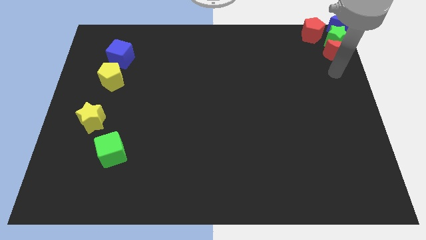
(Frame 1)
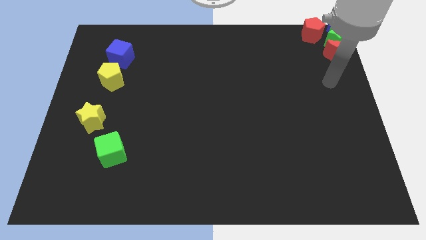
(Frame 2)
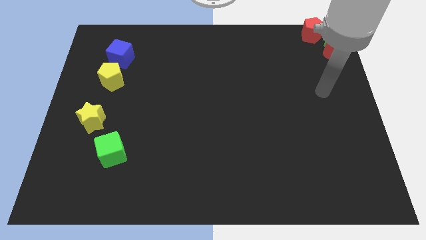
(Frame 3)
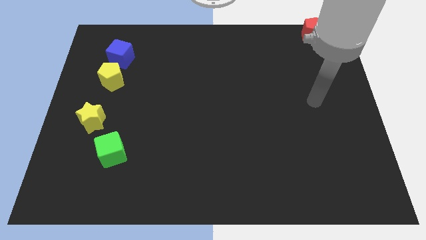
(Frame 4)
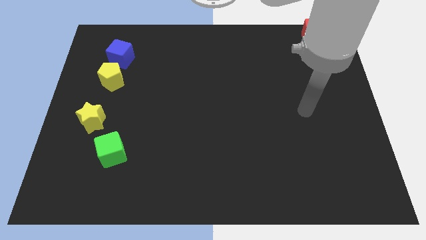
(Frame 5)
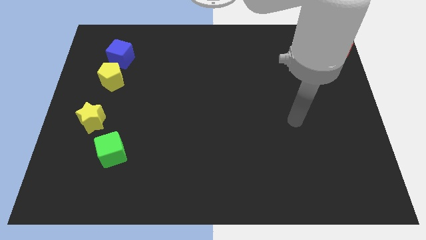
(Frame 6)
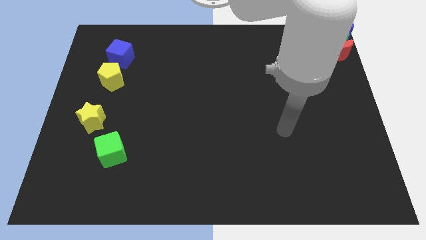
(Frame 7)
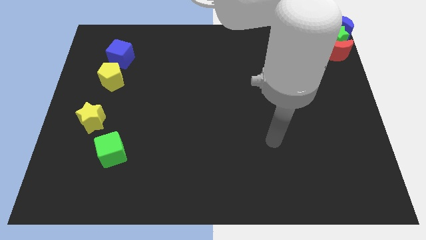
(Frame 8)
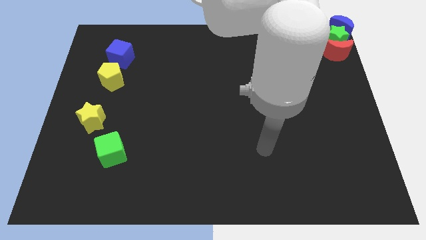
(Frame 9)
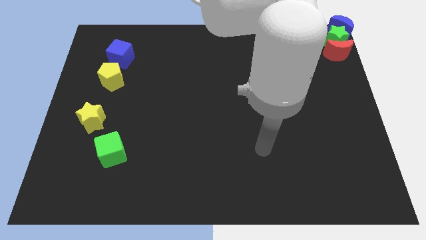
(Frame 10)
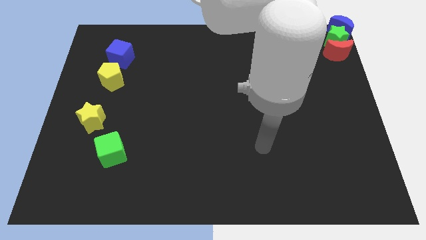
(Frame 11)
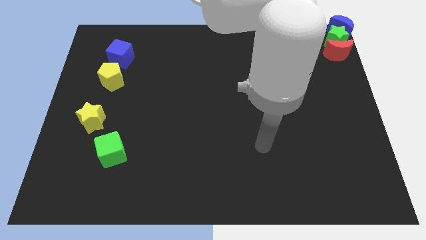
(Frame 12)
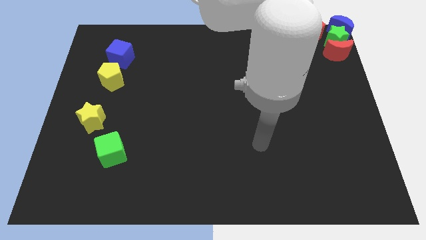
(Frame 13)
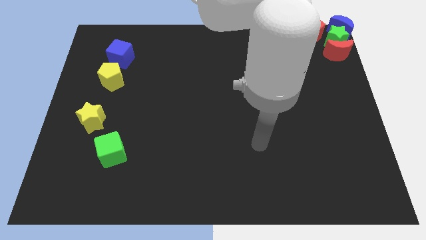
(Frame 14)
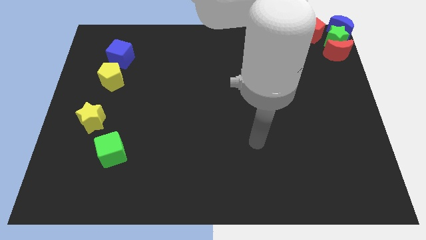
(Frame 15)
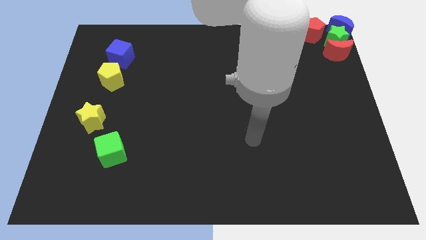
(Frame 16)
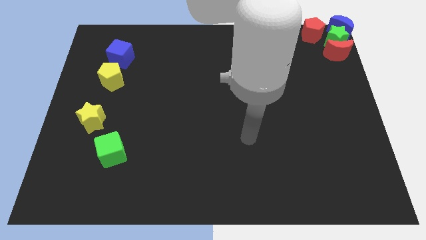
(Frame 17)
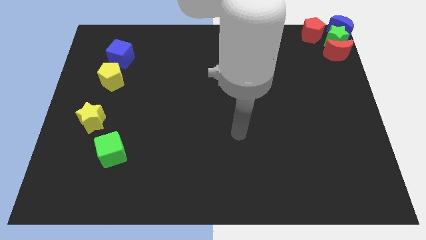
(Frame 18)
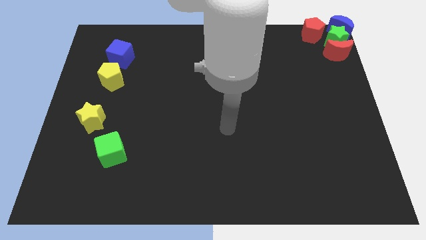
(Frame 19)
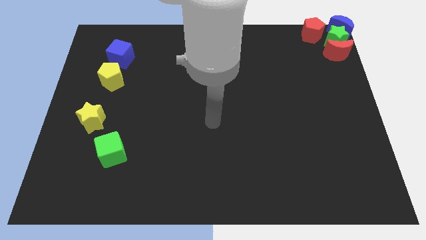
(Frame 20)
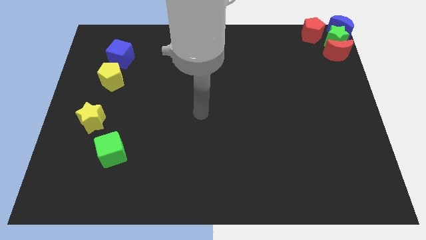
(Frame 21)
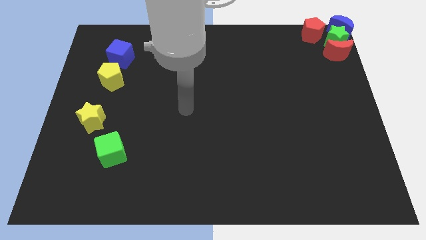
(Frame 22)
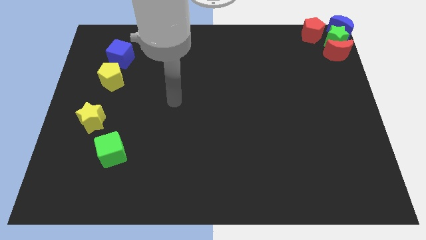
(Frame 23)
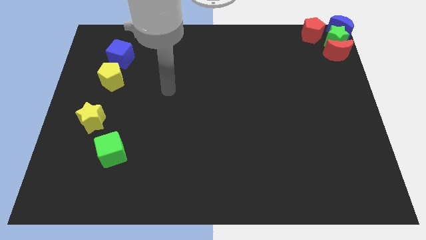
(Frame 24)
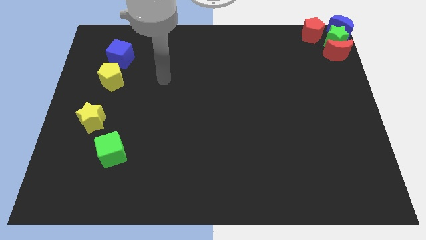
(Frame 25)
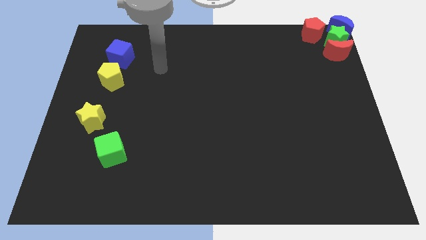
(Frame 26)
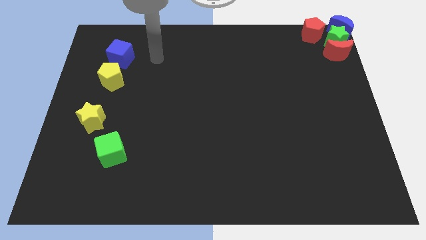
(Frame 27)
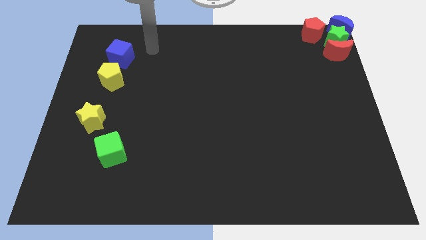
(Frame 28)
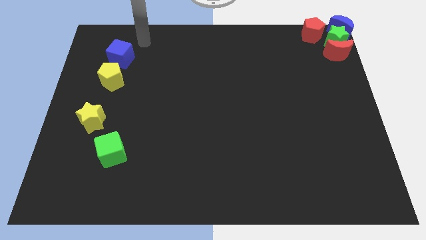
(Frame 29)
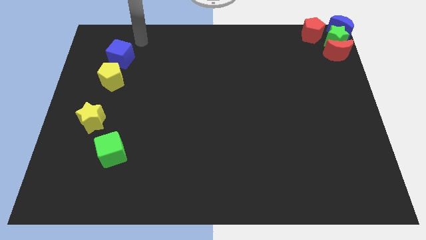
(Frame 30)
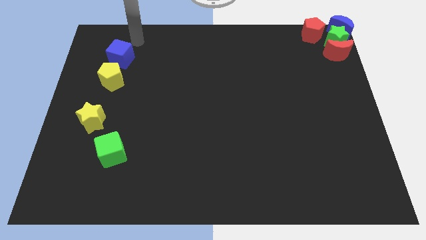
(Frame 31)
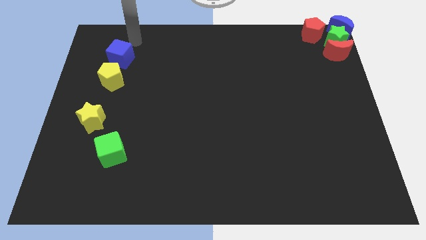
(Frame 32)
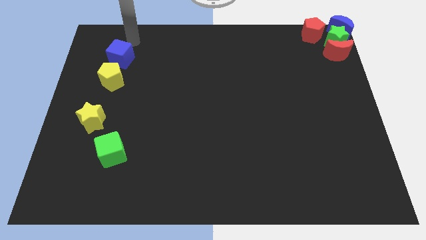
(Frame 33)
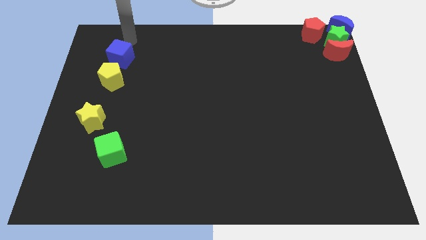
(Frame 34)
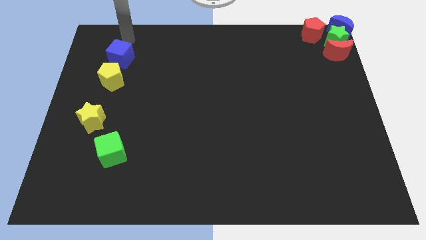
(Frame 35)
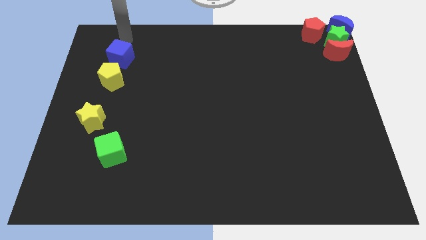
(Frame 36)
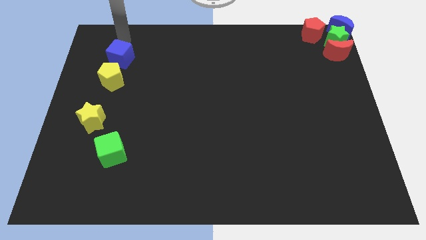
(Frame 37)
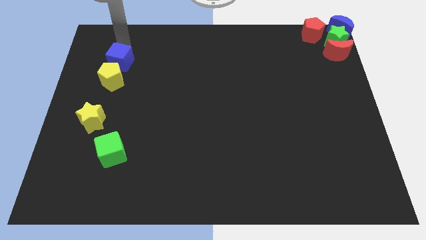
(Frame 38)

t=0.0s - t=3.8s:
move the arm diagonally to the bue cube

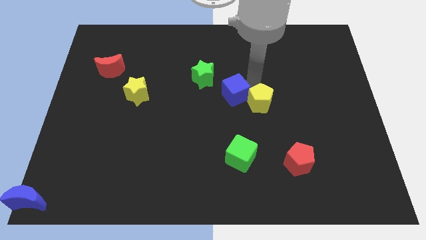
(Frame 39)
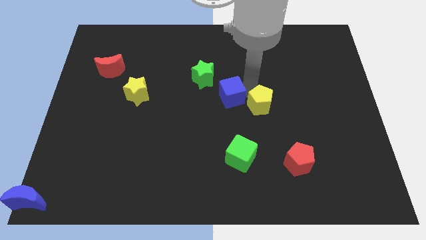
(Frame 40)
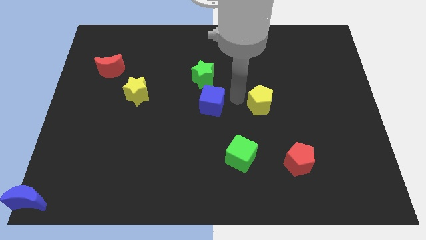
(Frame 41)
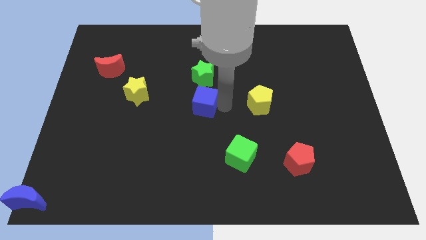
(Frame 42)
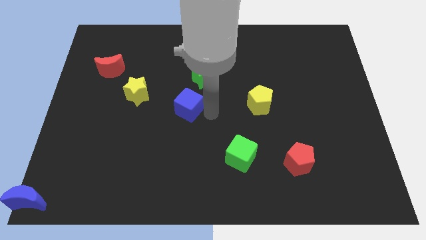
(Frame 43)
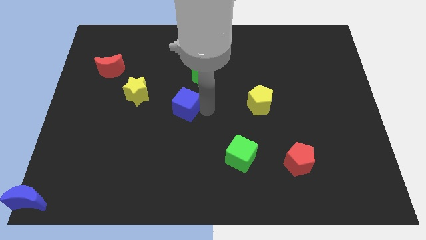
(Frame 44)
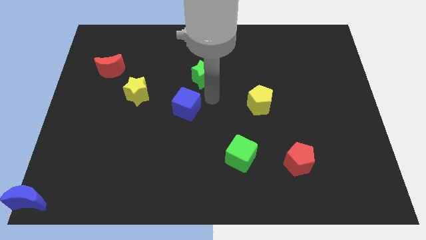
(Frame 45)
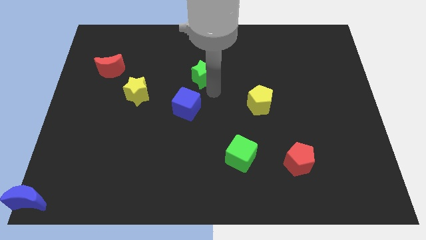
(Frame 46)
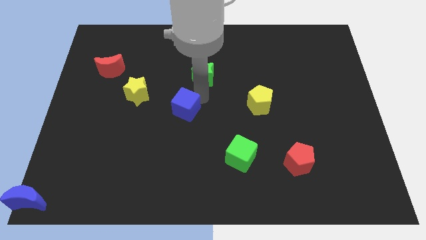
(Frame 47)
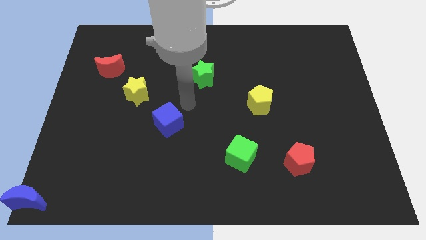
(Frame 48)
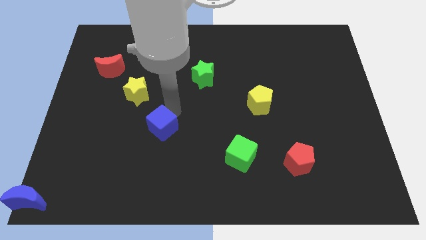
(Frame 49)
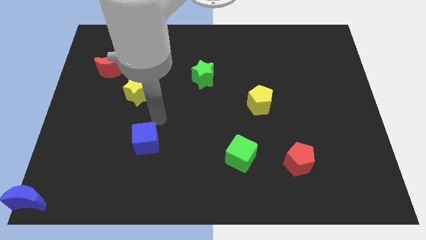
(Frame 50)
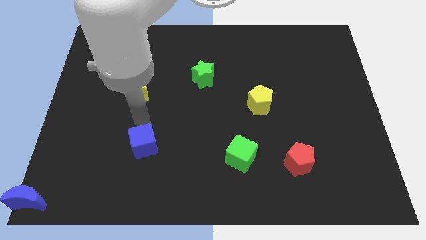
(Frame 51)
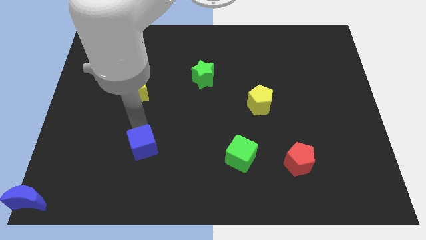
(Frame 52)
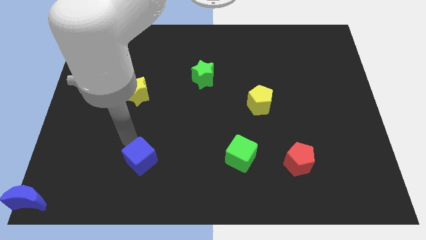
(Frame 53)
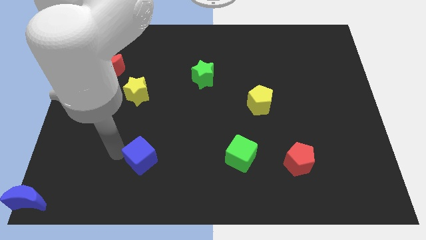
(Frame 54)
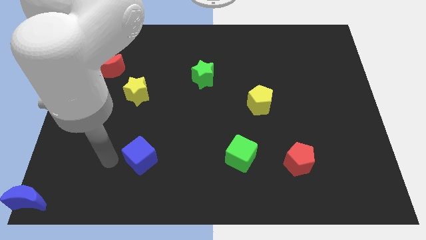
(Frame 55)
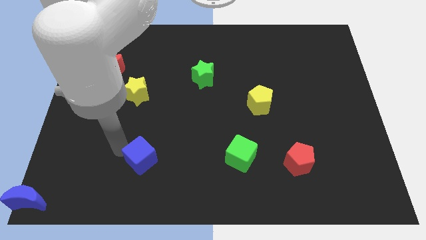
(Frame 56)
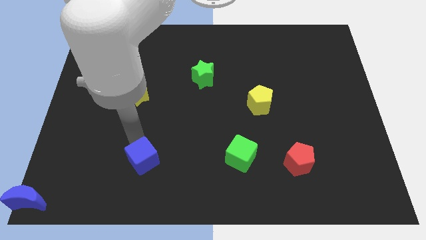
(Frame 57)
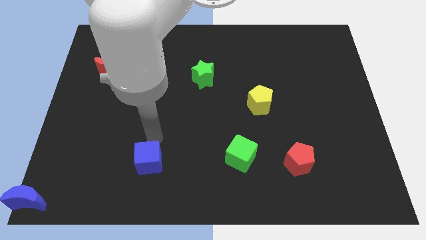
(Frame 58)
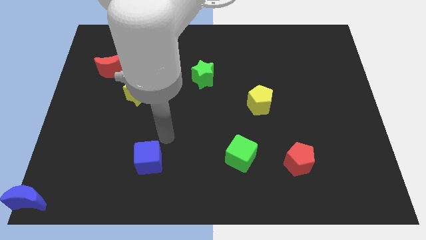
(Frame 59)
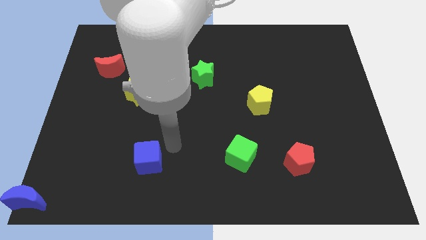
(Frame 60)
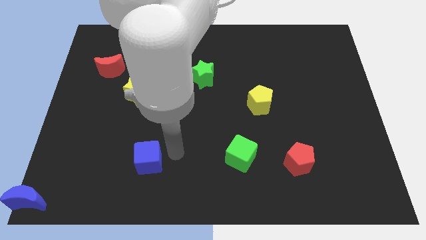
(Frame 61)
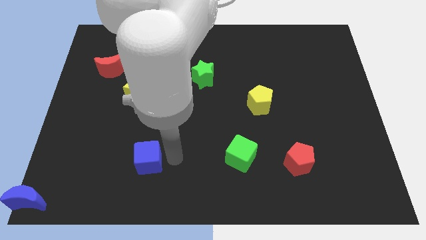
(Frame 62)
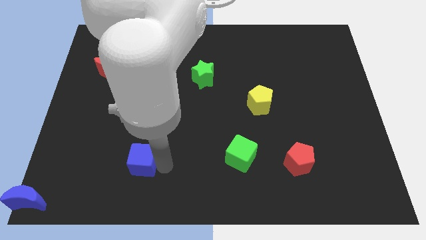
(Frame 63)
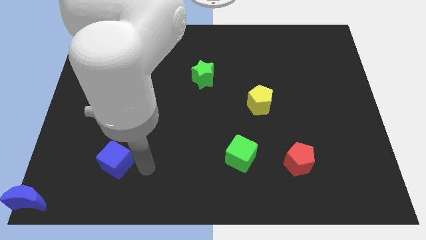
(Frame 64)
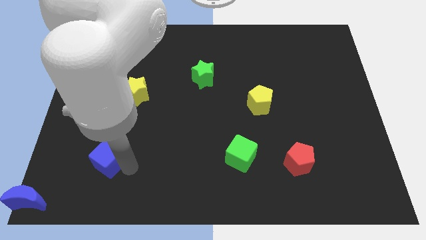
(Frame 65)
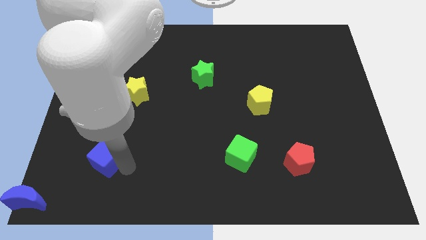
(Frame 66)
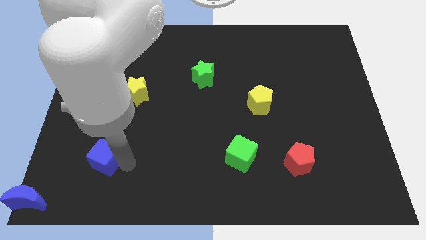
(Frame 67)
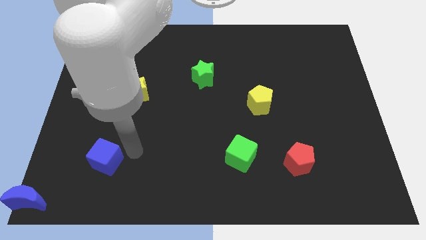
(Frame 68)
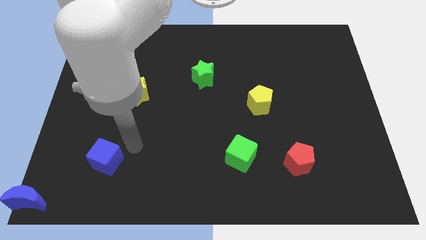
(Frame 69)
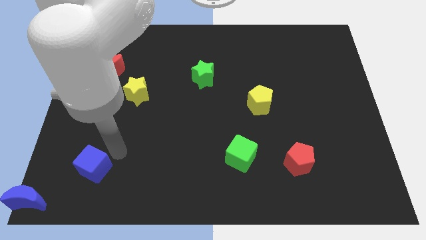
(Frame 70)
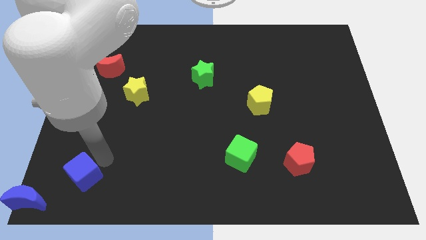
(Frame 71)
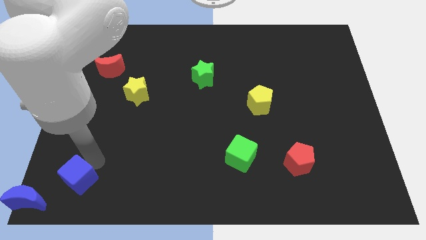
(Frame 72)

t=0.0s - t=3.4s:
push the blue cube towards the blue moon

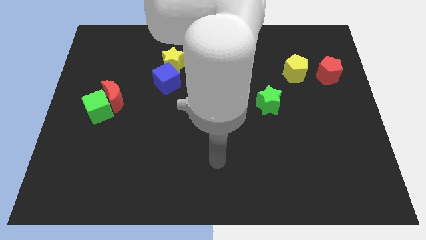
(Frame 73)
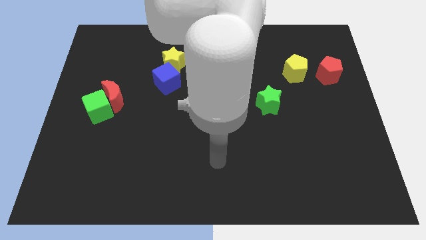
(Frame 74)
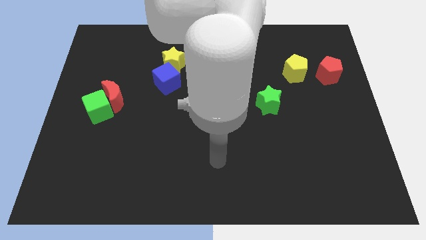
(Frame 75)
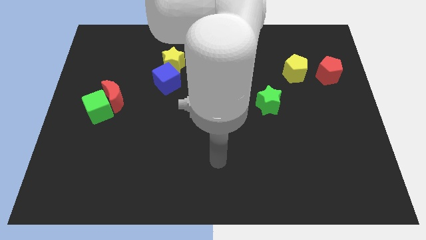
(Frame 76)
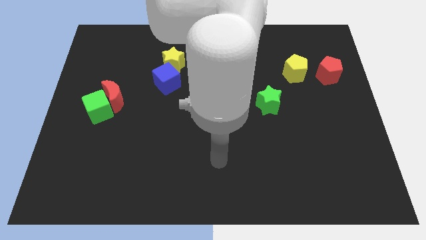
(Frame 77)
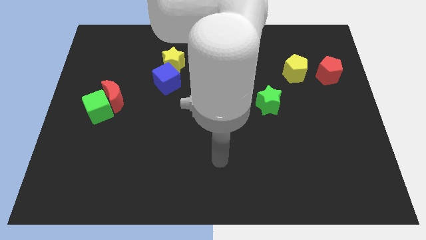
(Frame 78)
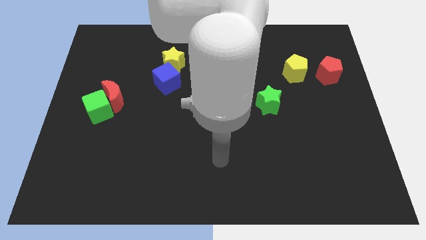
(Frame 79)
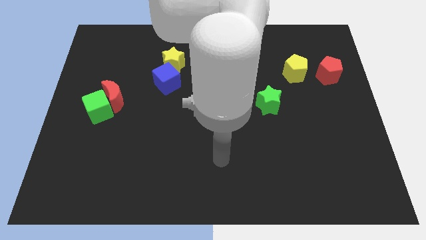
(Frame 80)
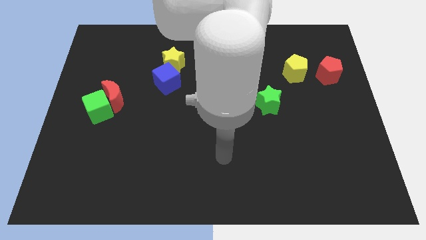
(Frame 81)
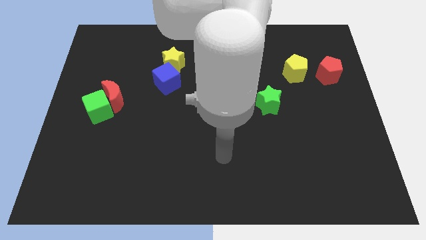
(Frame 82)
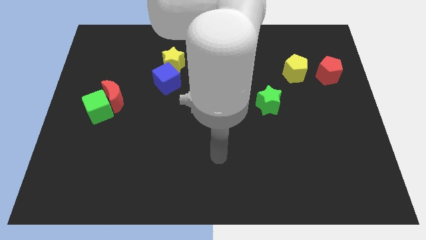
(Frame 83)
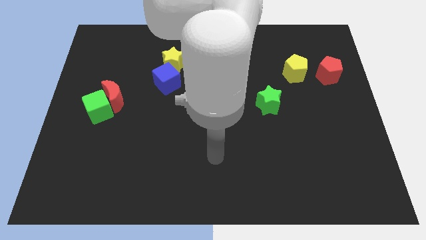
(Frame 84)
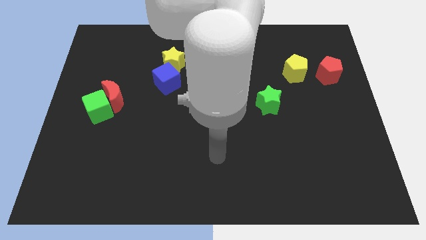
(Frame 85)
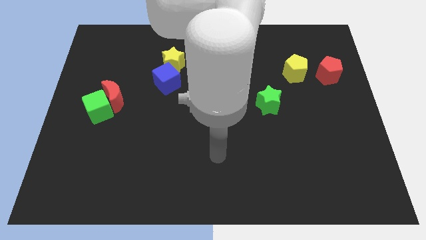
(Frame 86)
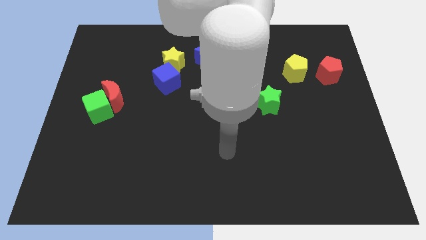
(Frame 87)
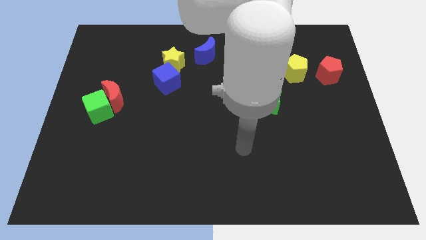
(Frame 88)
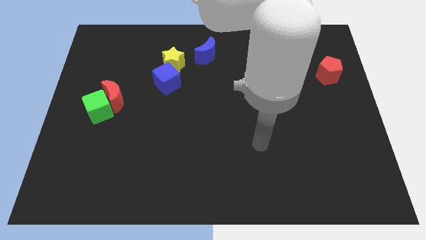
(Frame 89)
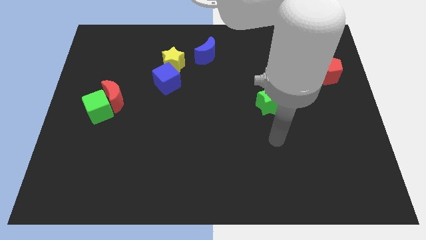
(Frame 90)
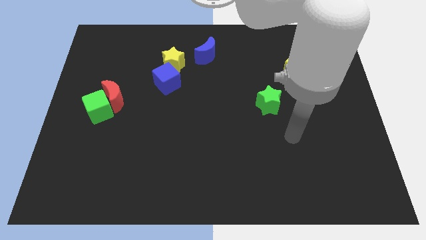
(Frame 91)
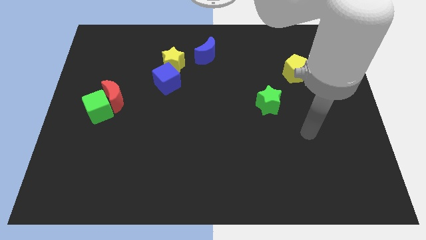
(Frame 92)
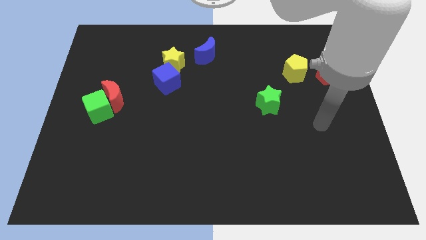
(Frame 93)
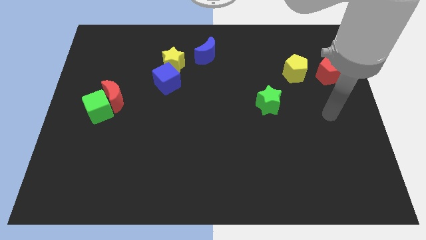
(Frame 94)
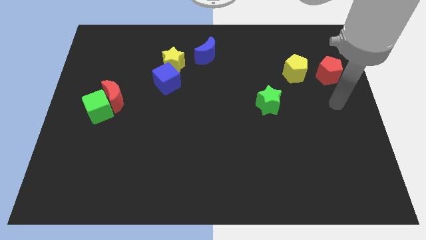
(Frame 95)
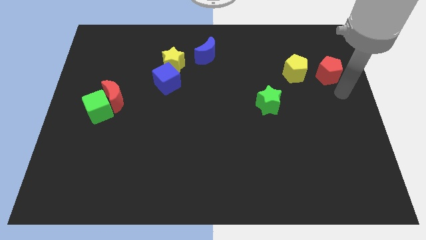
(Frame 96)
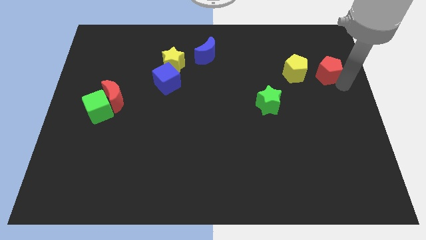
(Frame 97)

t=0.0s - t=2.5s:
place your arm to the right of red pentagon
